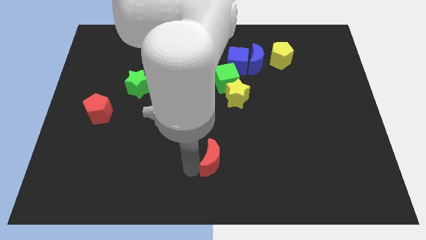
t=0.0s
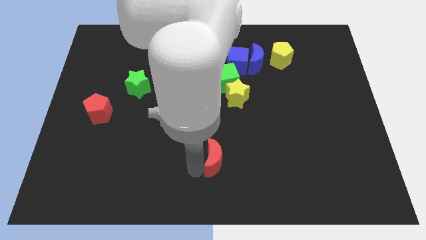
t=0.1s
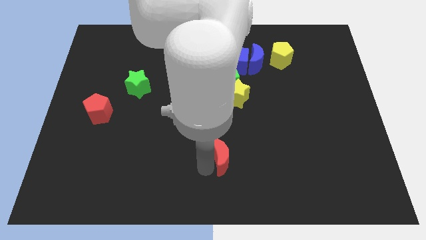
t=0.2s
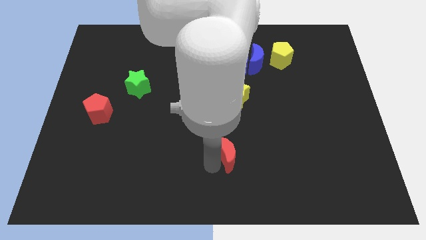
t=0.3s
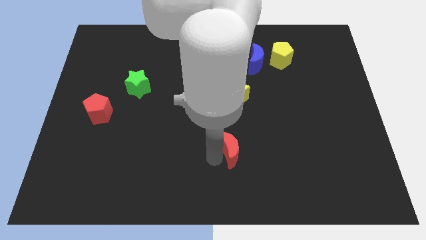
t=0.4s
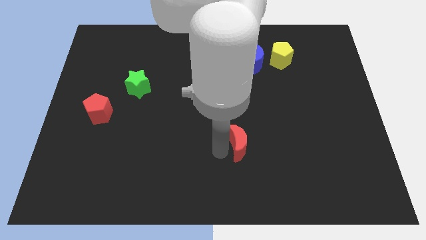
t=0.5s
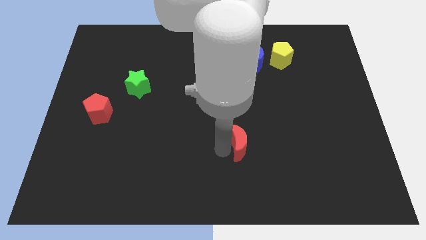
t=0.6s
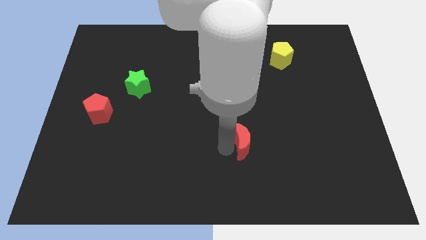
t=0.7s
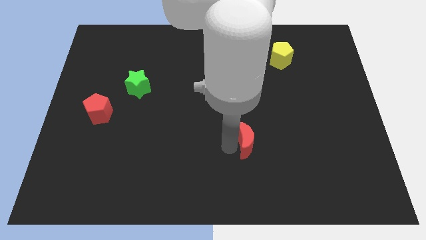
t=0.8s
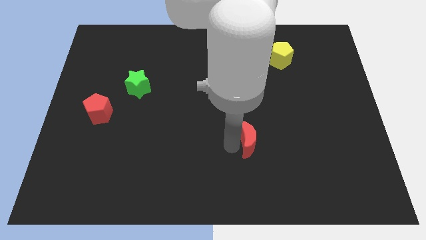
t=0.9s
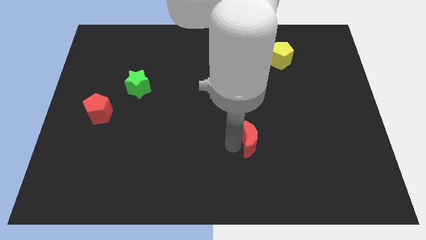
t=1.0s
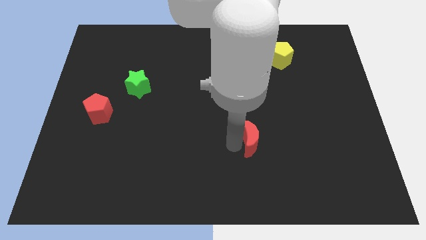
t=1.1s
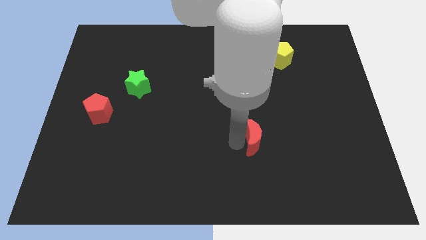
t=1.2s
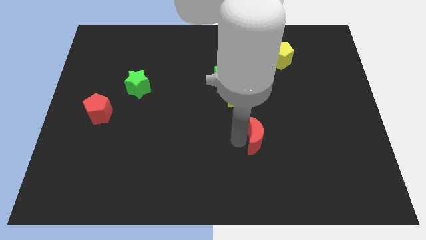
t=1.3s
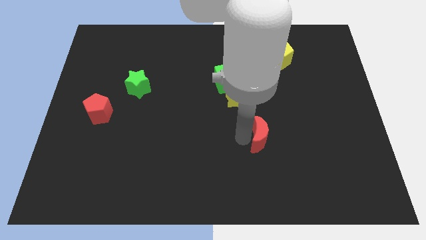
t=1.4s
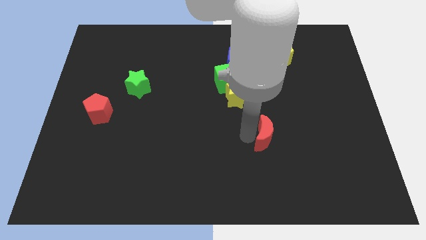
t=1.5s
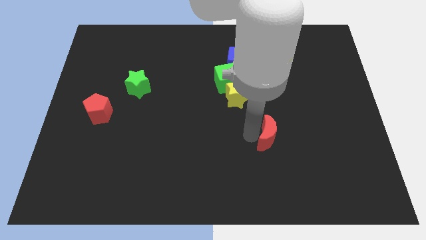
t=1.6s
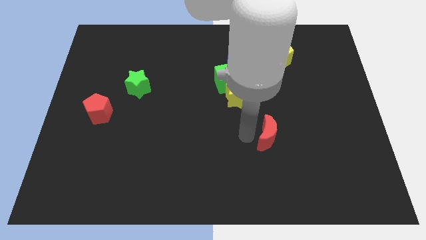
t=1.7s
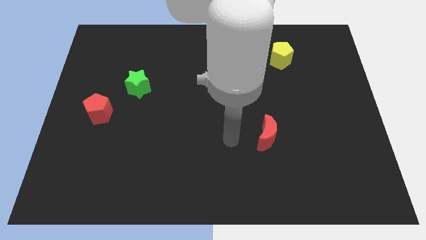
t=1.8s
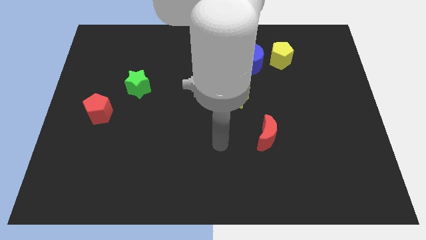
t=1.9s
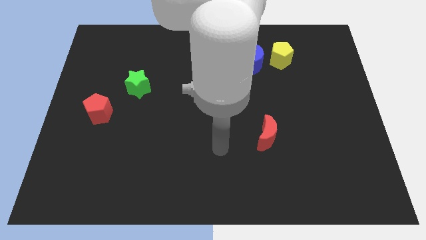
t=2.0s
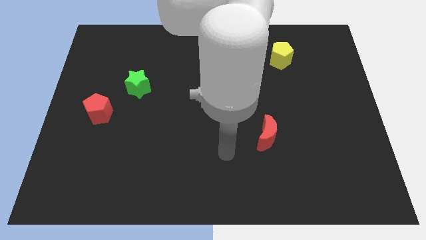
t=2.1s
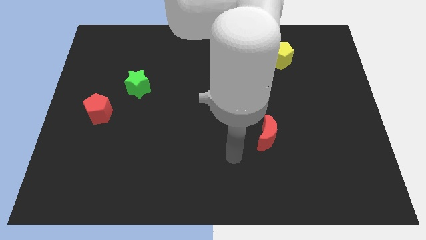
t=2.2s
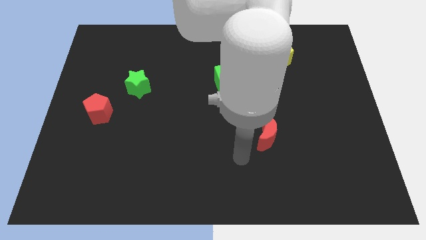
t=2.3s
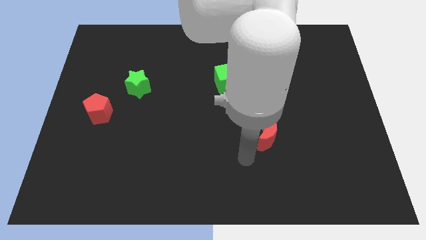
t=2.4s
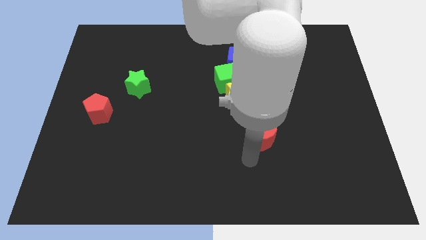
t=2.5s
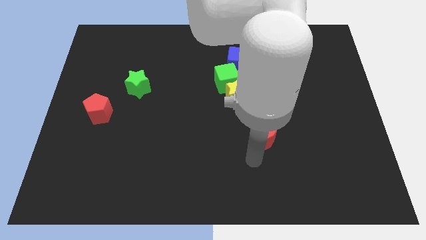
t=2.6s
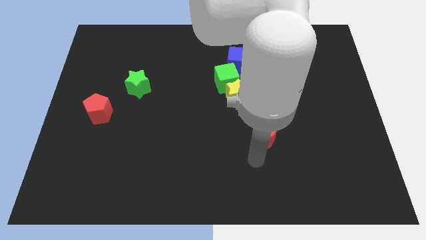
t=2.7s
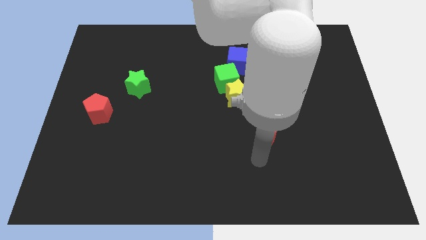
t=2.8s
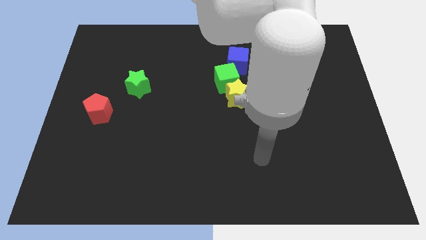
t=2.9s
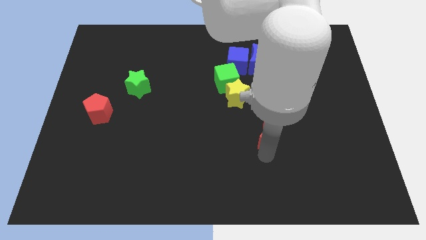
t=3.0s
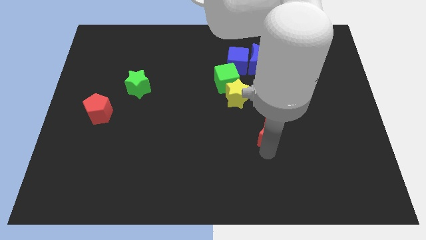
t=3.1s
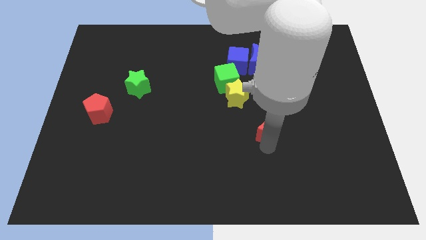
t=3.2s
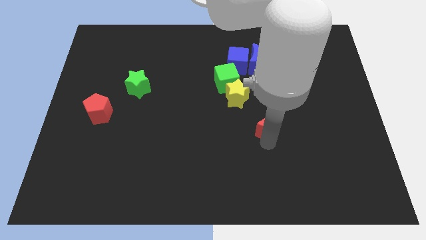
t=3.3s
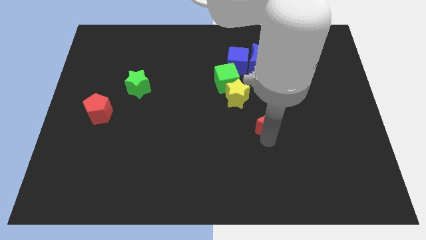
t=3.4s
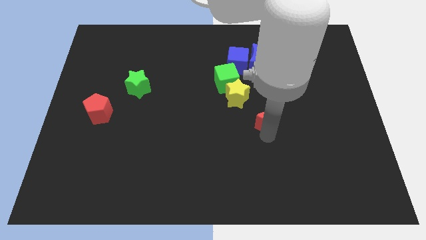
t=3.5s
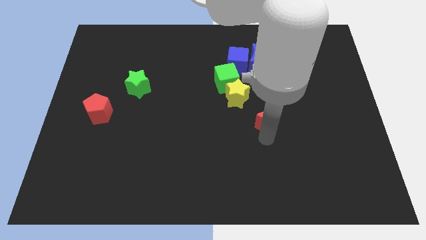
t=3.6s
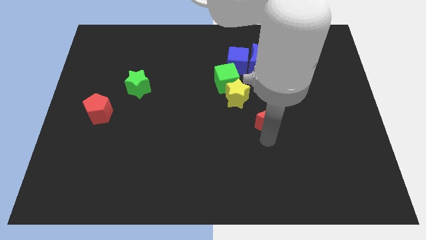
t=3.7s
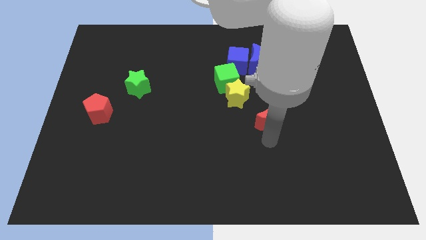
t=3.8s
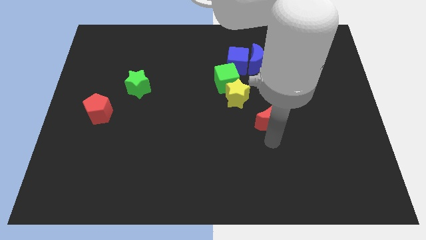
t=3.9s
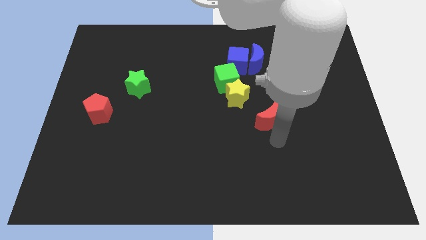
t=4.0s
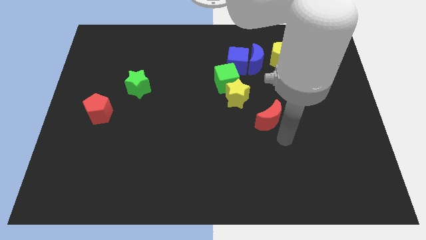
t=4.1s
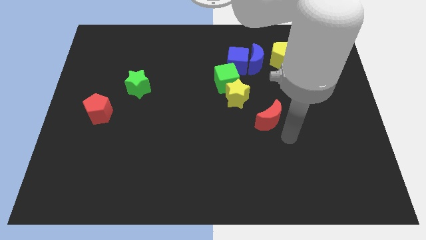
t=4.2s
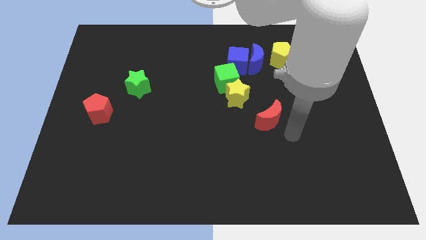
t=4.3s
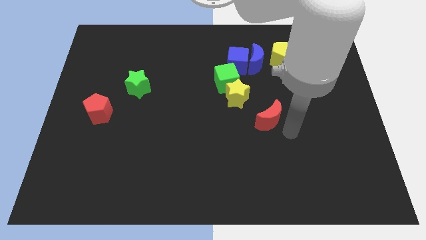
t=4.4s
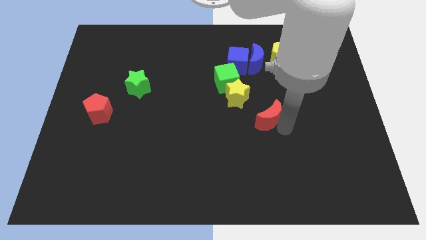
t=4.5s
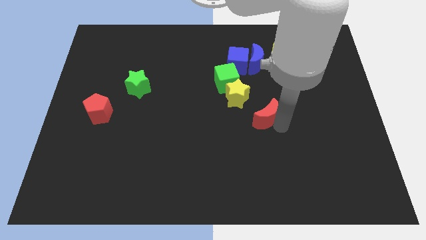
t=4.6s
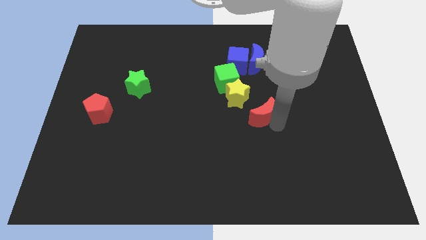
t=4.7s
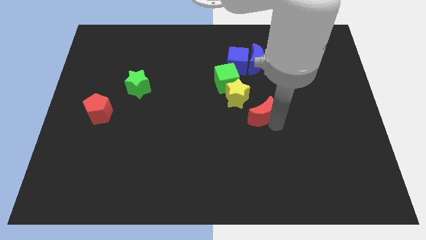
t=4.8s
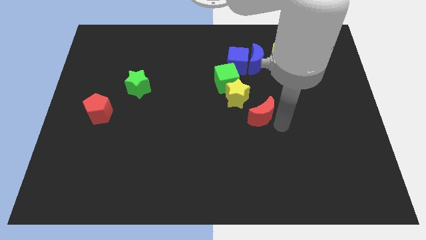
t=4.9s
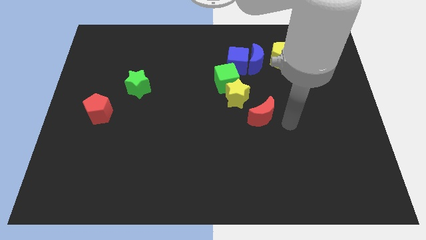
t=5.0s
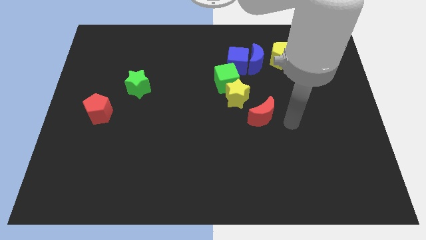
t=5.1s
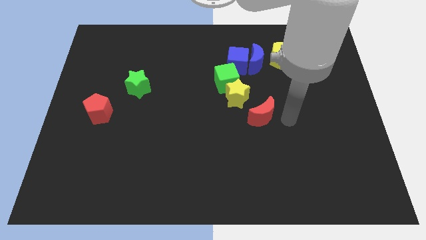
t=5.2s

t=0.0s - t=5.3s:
place the red moon at the bottom right side of yellow star

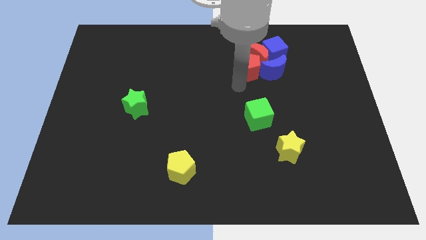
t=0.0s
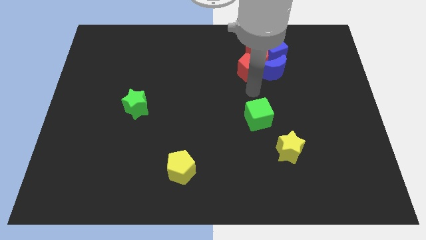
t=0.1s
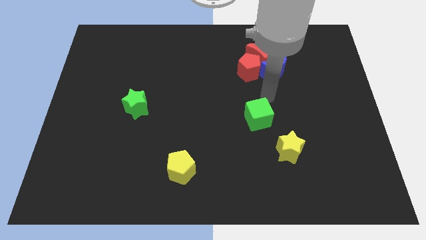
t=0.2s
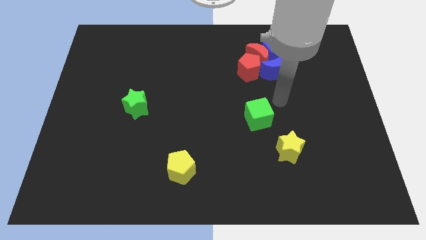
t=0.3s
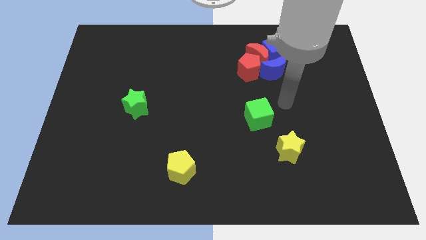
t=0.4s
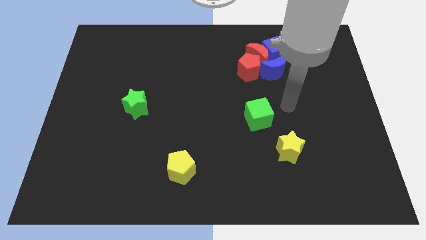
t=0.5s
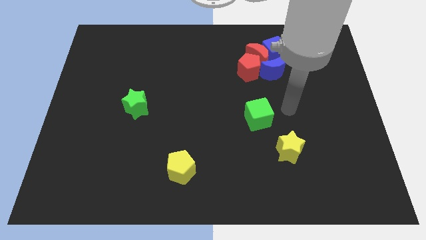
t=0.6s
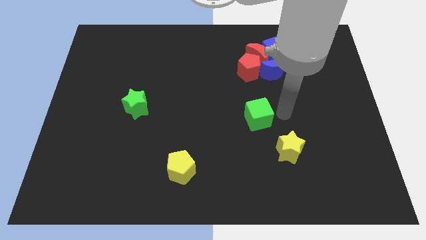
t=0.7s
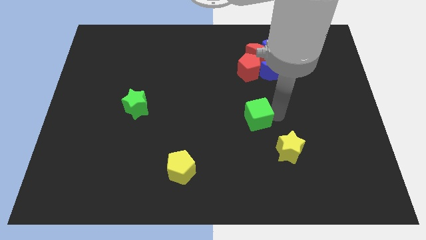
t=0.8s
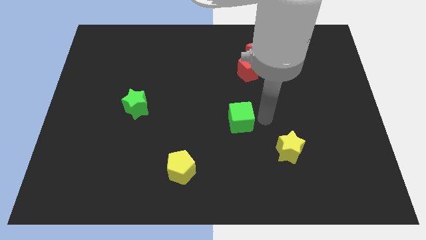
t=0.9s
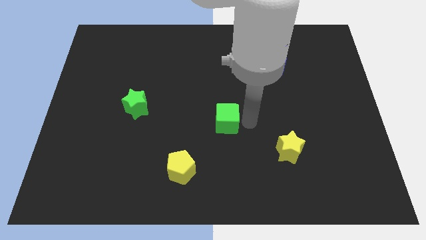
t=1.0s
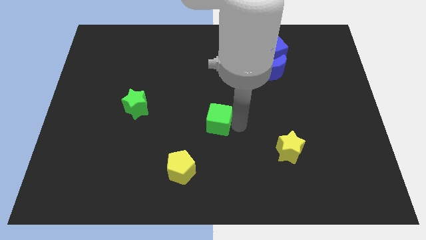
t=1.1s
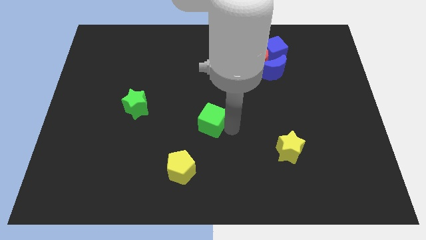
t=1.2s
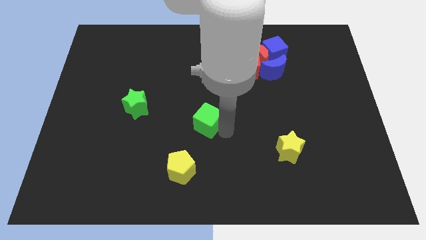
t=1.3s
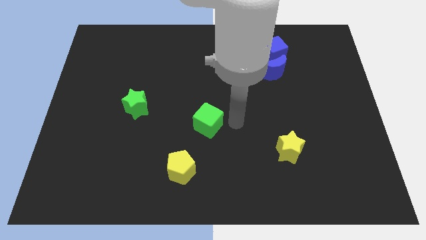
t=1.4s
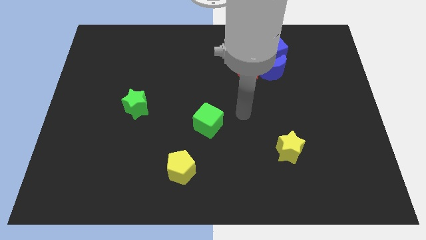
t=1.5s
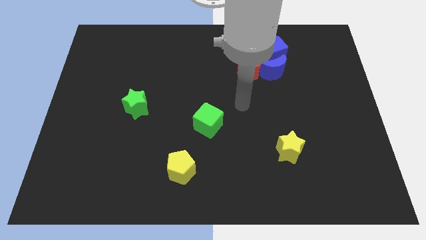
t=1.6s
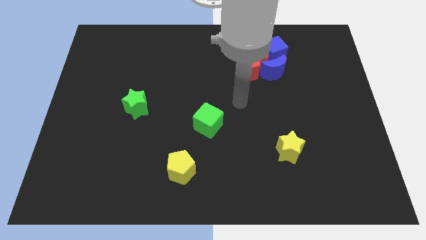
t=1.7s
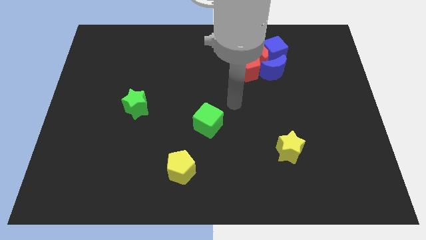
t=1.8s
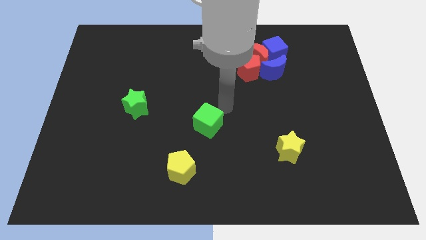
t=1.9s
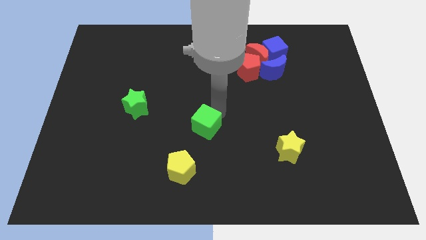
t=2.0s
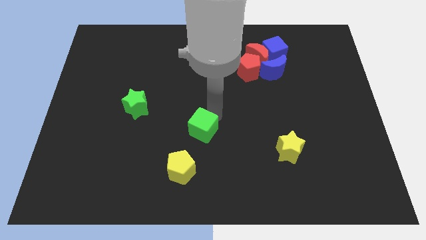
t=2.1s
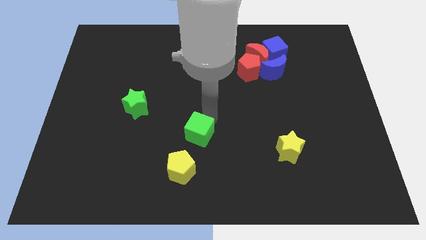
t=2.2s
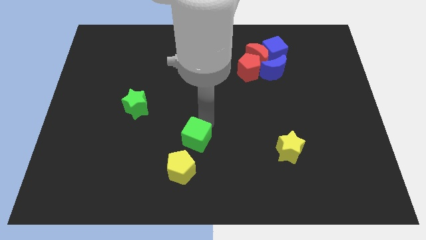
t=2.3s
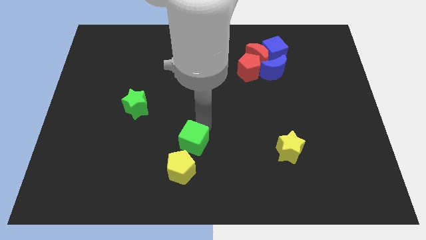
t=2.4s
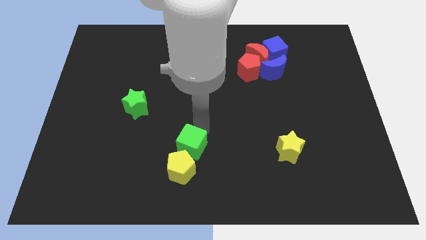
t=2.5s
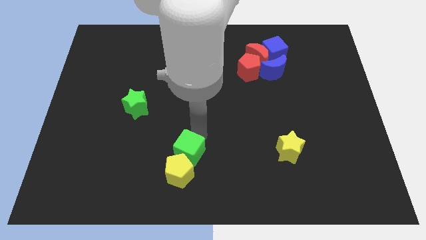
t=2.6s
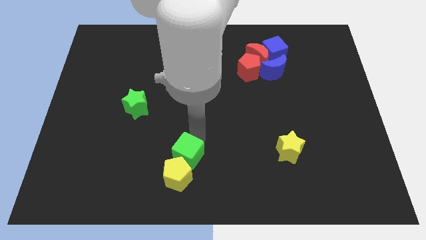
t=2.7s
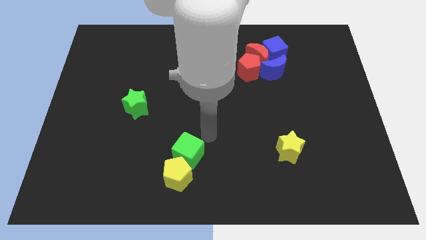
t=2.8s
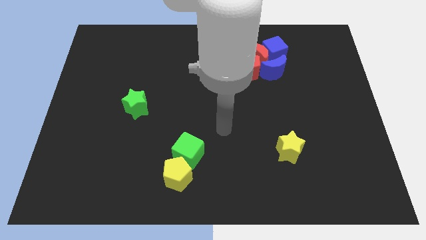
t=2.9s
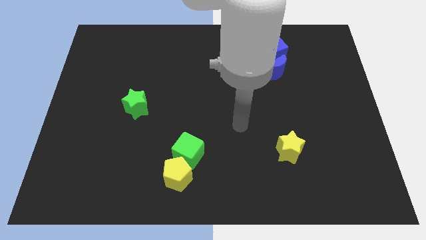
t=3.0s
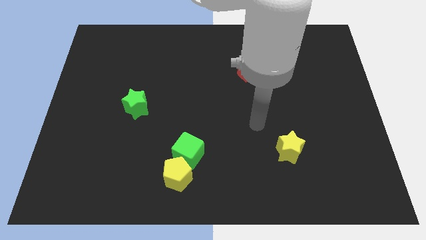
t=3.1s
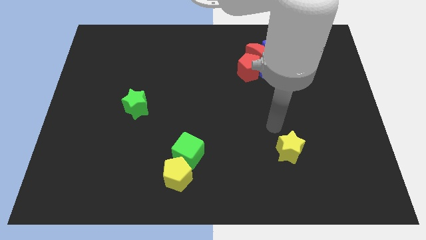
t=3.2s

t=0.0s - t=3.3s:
drag the green cube into the yellow pentagon

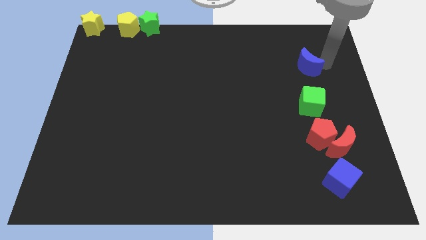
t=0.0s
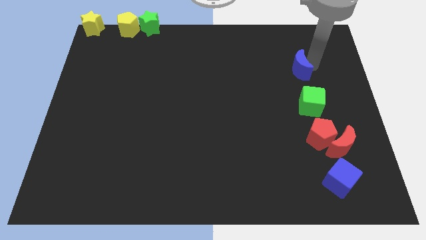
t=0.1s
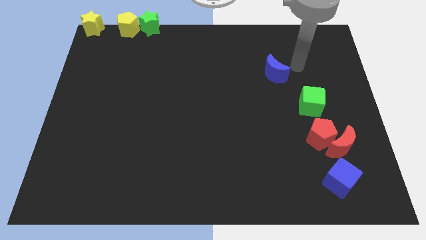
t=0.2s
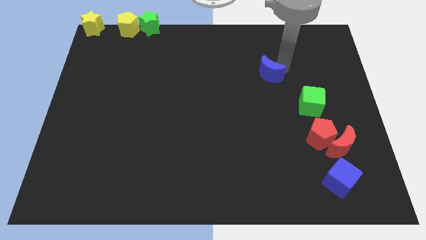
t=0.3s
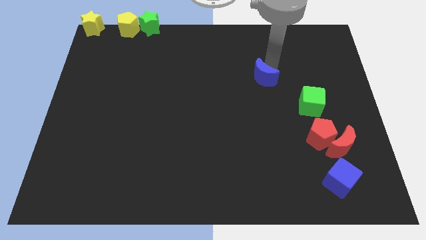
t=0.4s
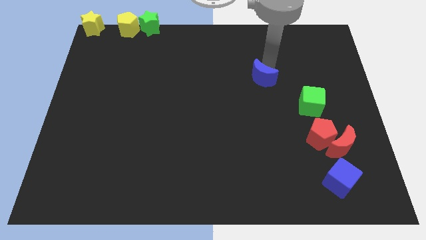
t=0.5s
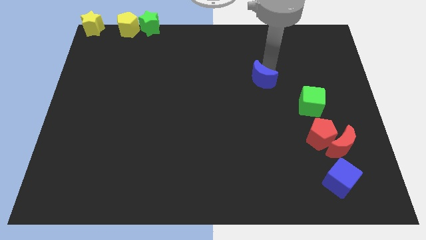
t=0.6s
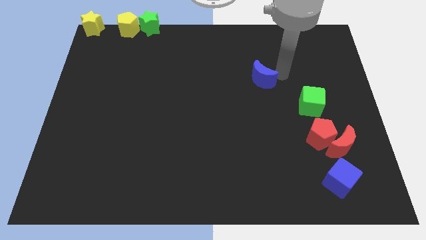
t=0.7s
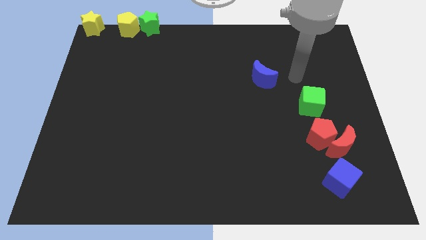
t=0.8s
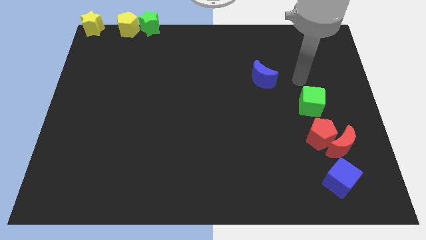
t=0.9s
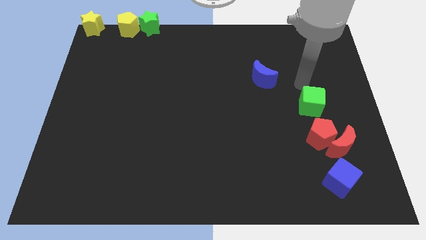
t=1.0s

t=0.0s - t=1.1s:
place the blue moon diagonal to the green cube
